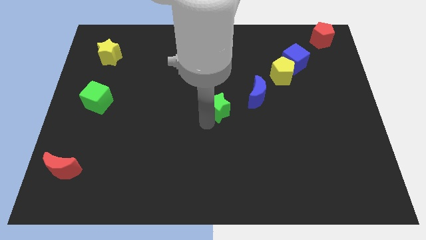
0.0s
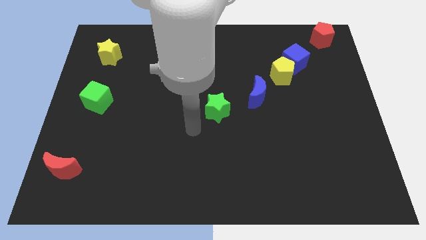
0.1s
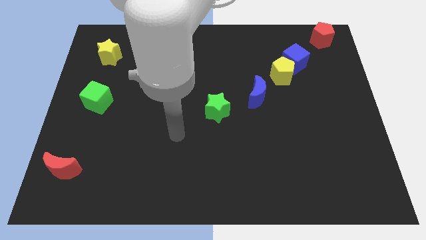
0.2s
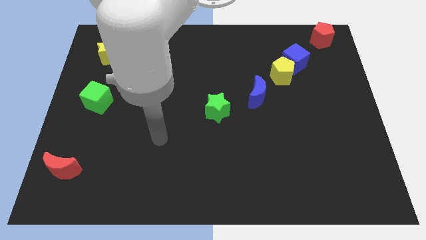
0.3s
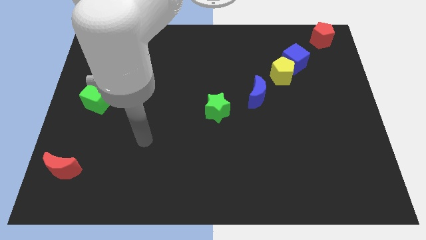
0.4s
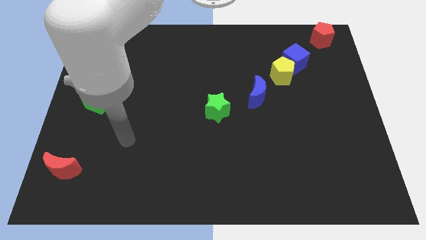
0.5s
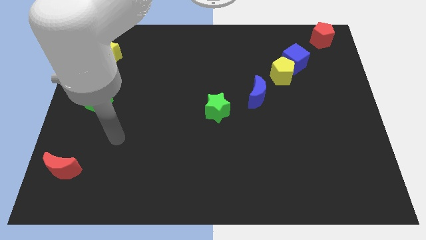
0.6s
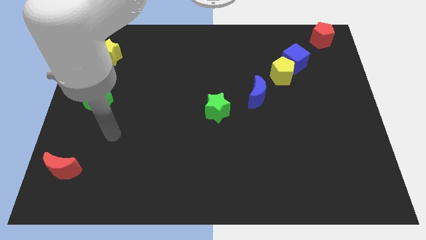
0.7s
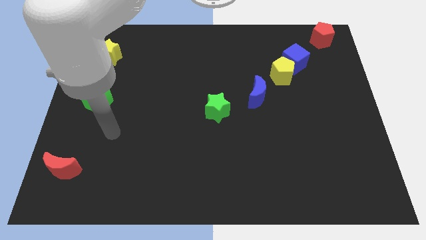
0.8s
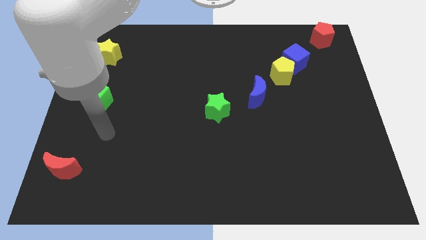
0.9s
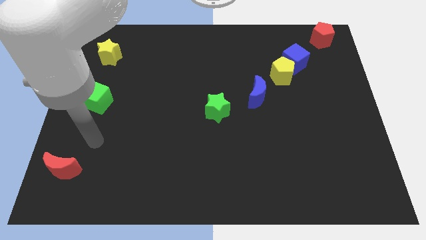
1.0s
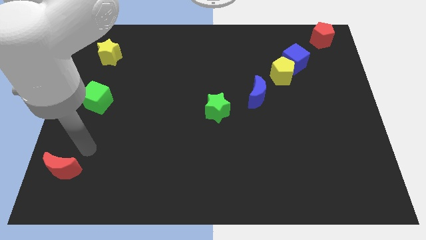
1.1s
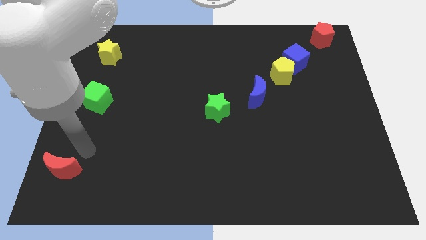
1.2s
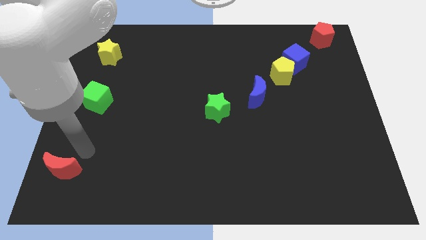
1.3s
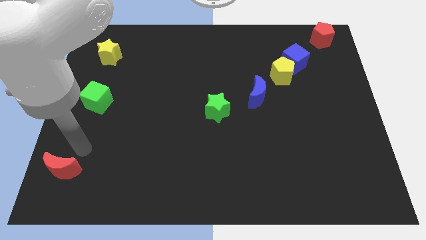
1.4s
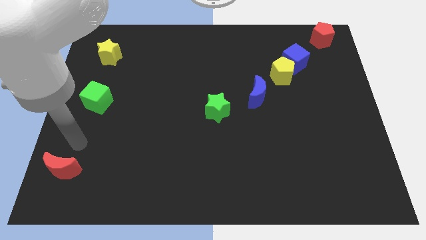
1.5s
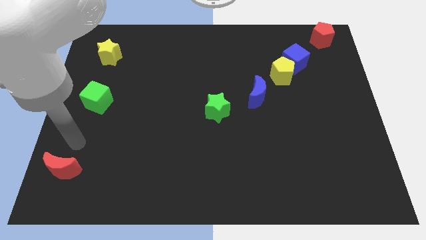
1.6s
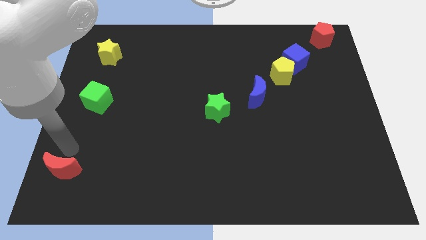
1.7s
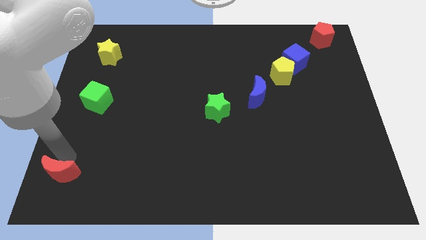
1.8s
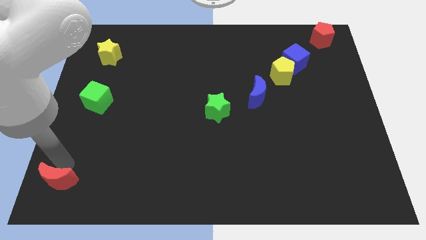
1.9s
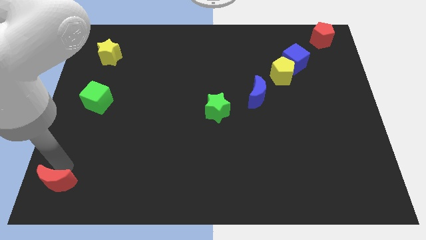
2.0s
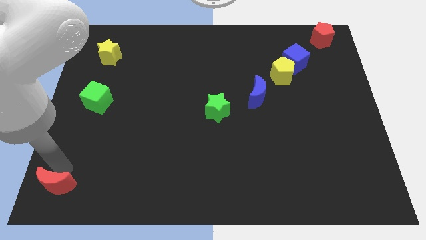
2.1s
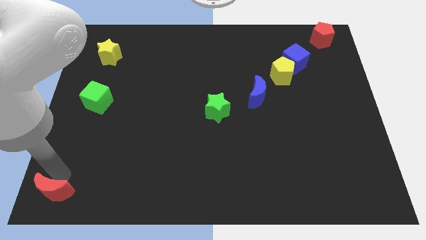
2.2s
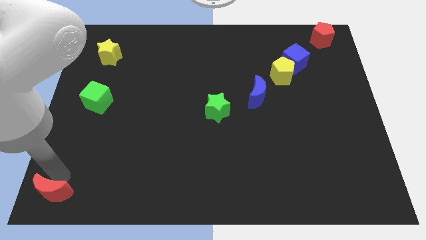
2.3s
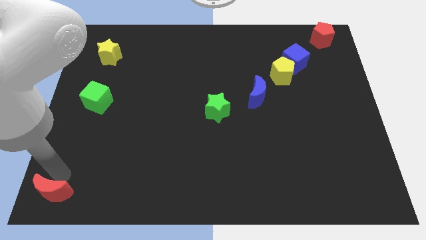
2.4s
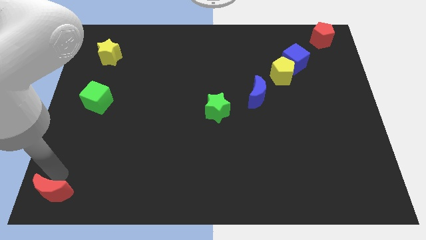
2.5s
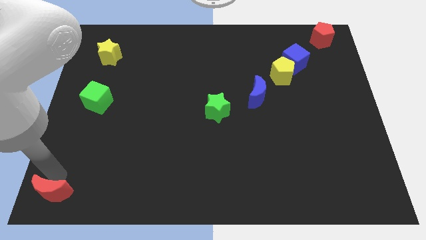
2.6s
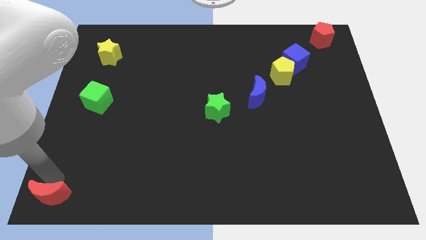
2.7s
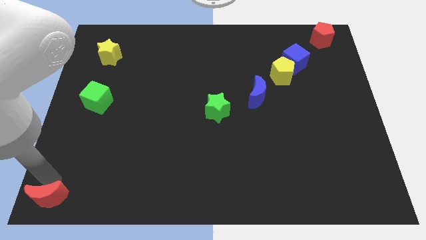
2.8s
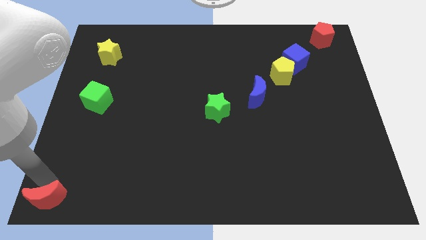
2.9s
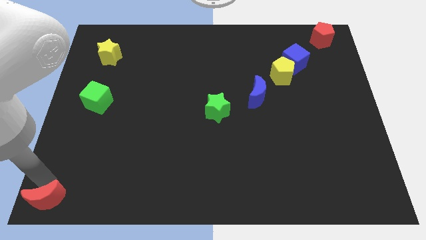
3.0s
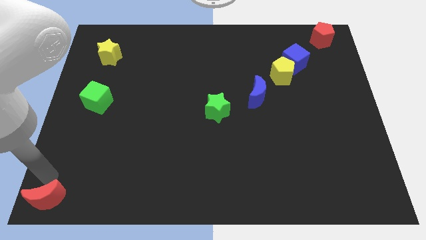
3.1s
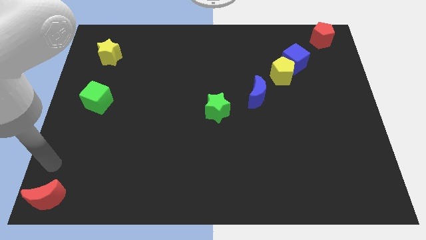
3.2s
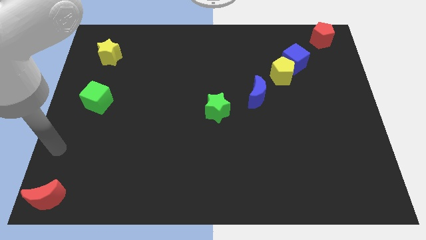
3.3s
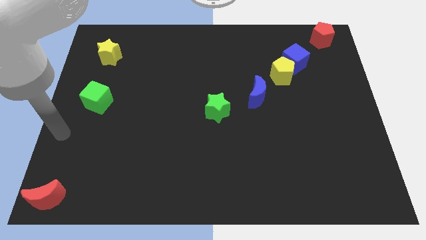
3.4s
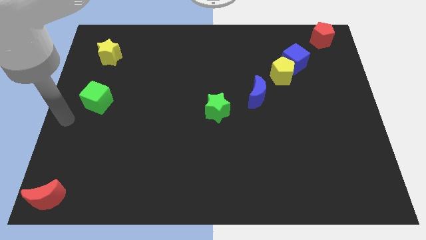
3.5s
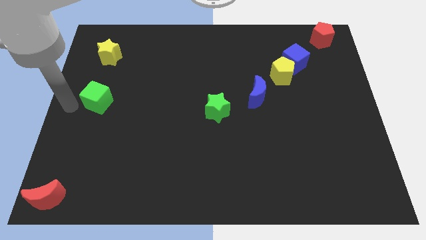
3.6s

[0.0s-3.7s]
place the red crescent to the left bottom of board

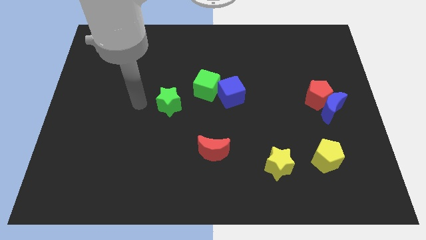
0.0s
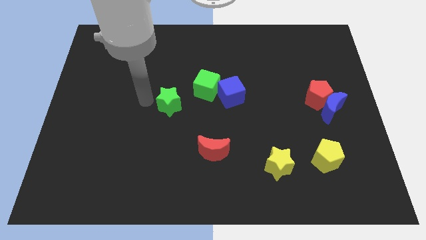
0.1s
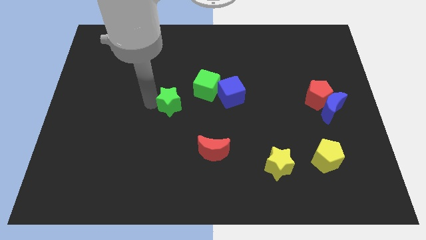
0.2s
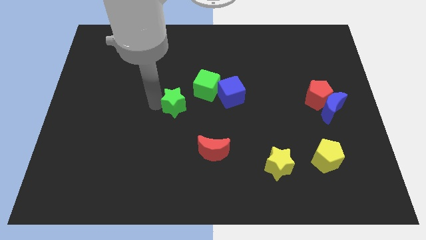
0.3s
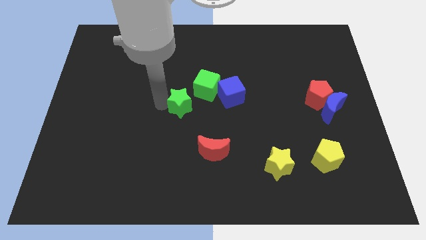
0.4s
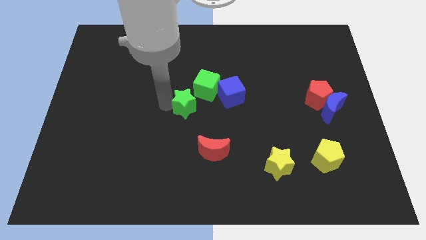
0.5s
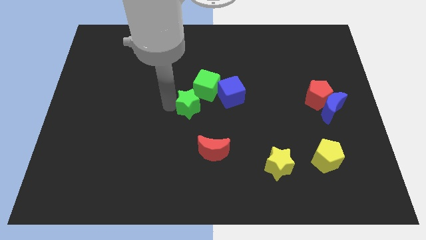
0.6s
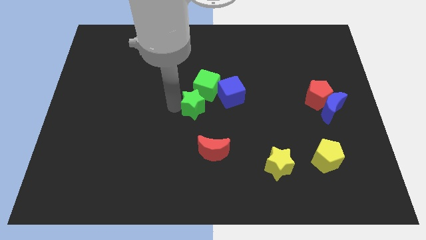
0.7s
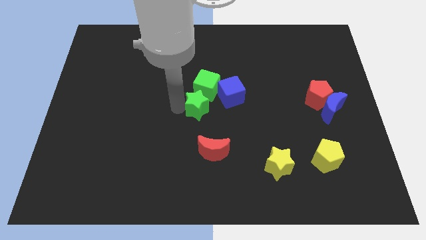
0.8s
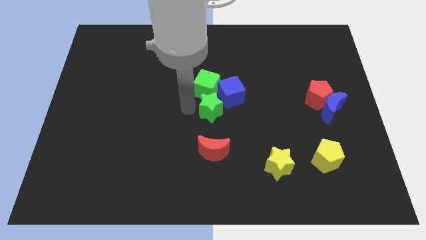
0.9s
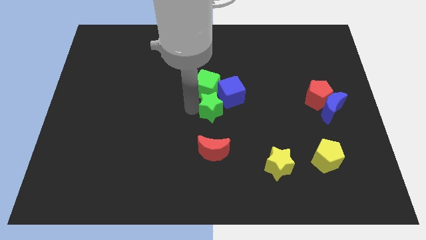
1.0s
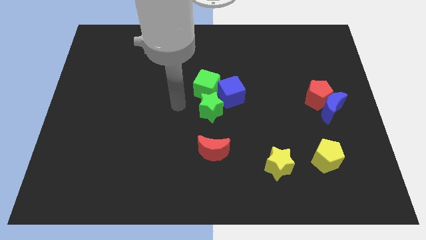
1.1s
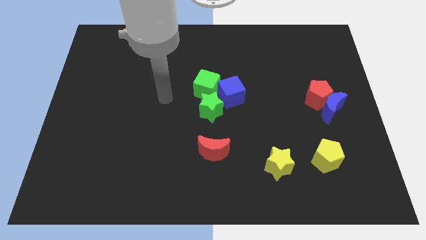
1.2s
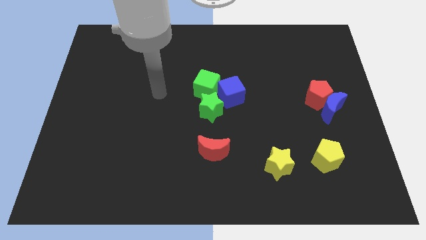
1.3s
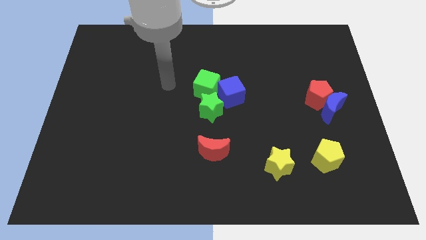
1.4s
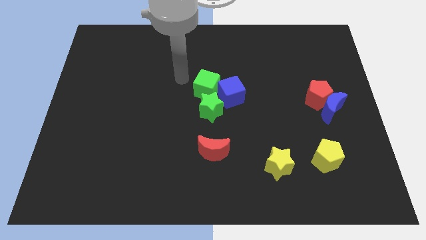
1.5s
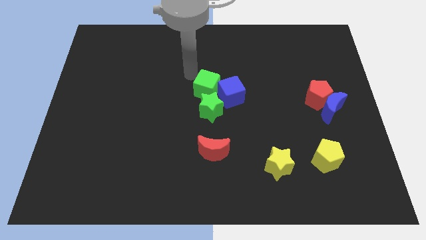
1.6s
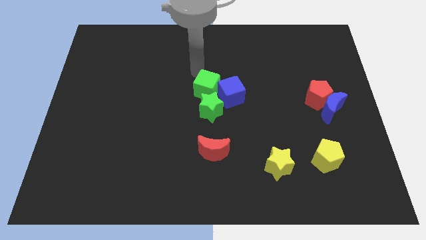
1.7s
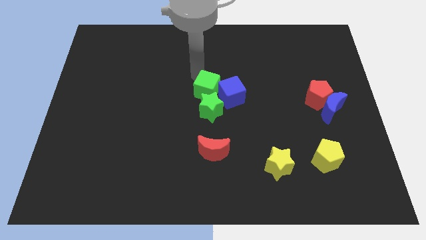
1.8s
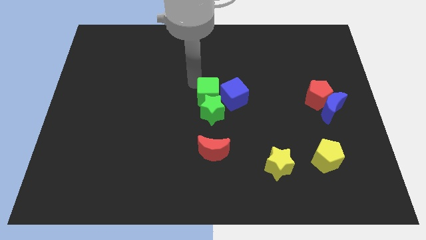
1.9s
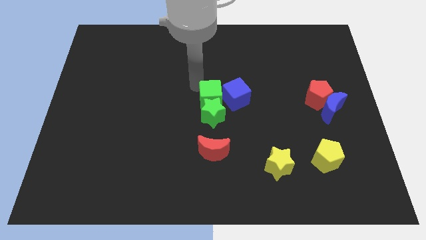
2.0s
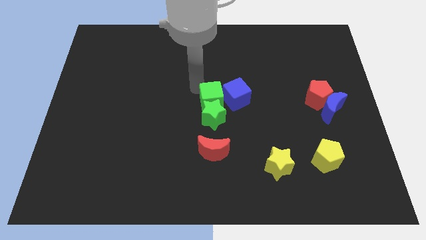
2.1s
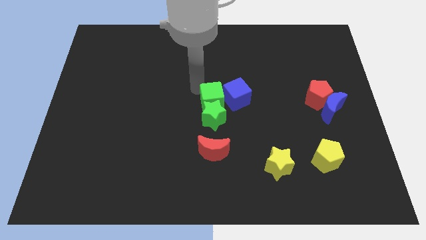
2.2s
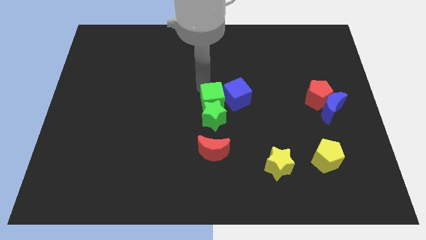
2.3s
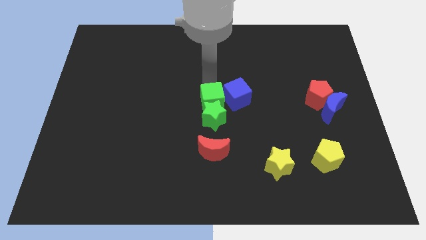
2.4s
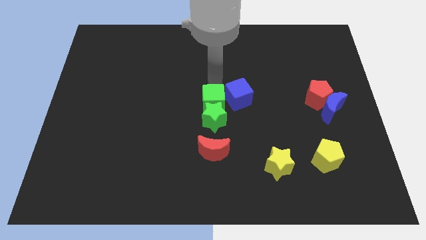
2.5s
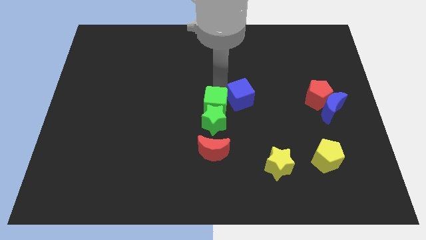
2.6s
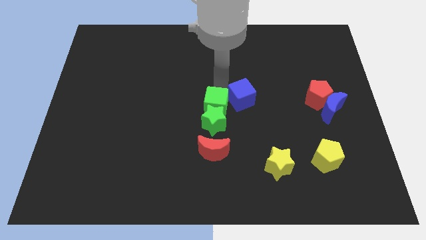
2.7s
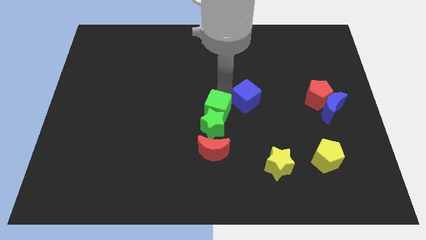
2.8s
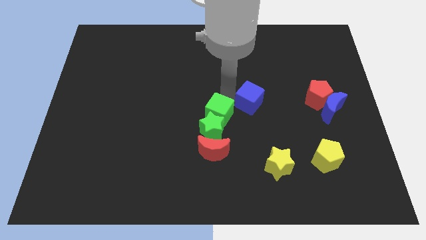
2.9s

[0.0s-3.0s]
push green cubes towards red crescent

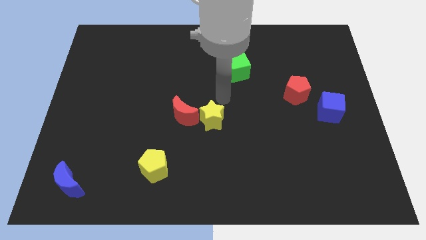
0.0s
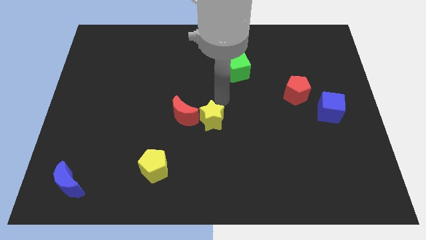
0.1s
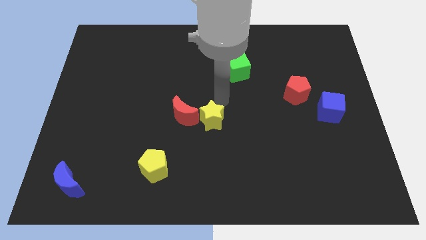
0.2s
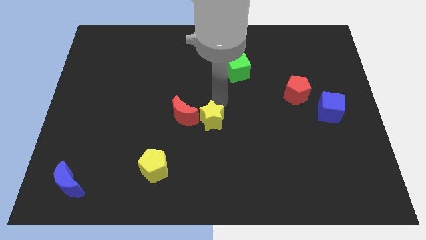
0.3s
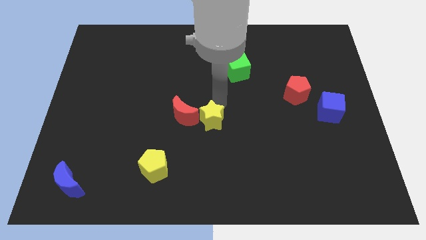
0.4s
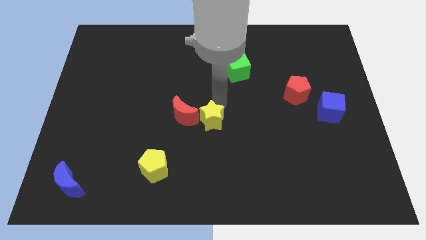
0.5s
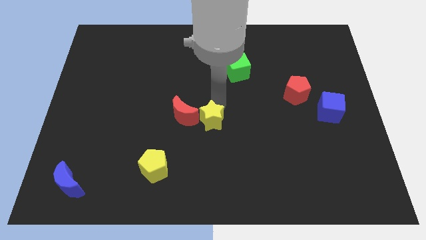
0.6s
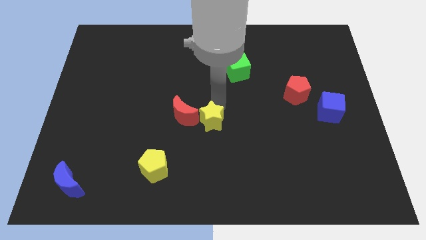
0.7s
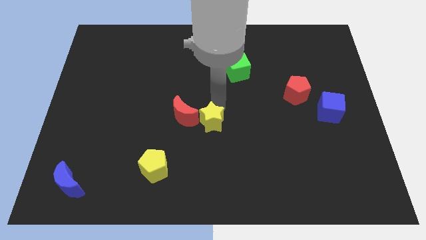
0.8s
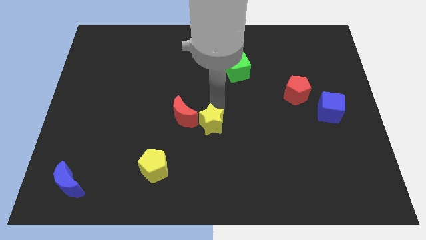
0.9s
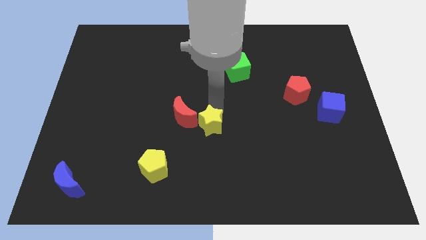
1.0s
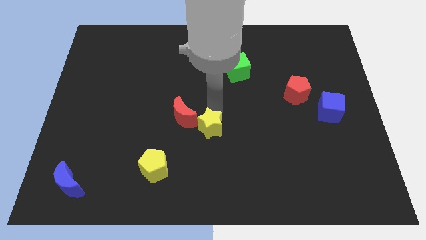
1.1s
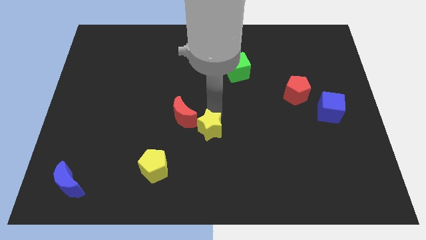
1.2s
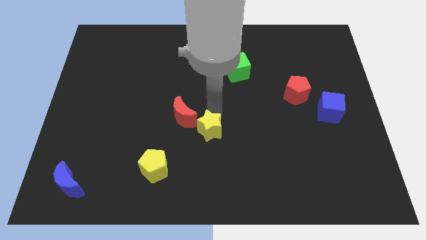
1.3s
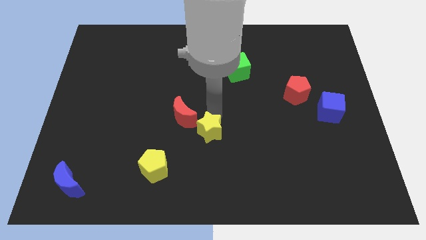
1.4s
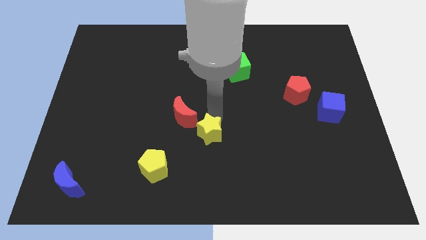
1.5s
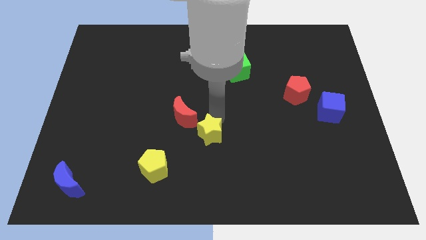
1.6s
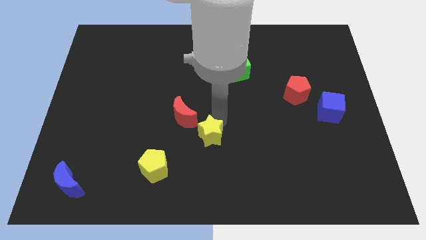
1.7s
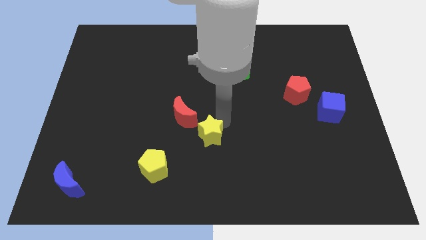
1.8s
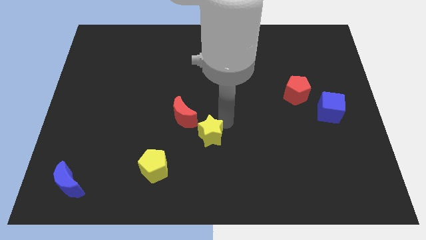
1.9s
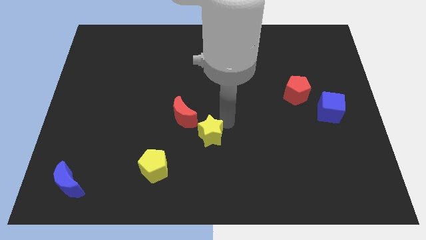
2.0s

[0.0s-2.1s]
separate the yellow star from the red crescent

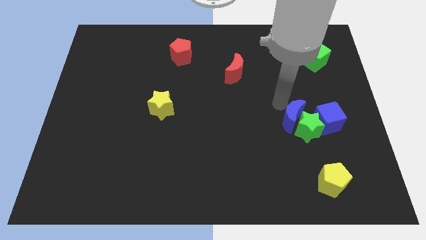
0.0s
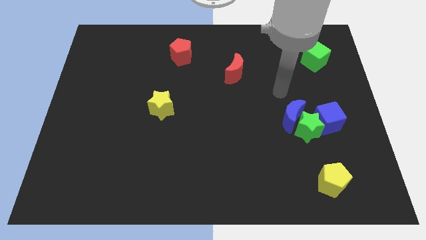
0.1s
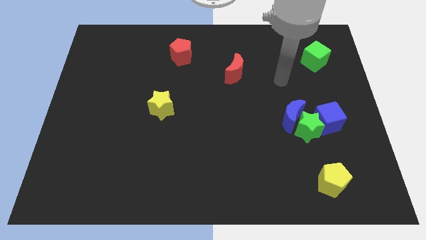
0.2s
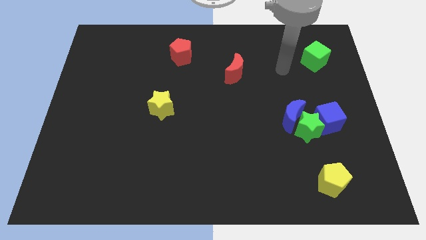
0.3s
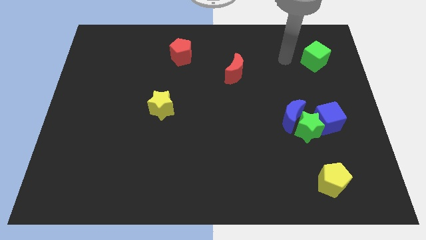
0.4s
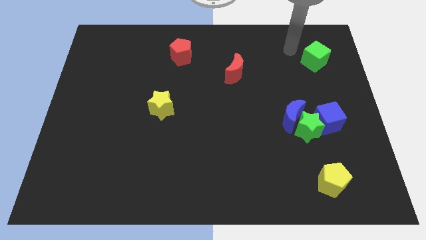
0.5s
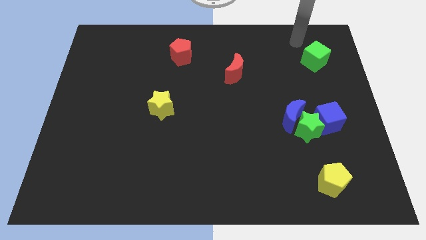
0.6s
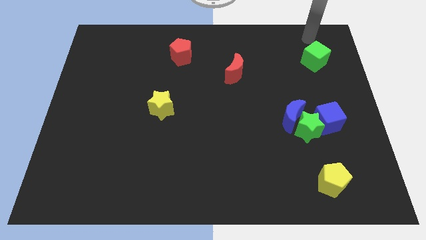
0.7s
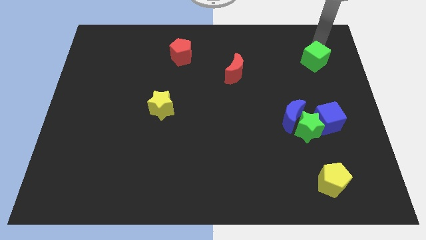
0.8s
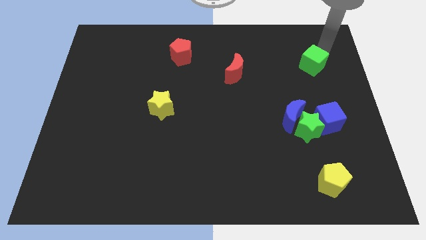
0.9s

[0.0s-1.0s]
push green cube slightly to its bottom
